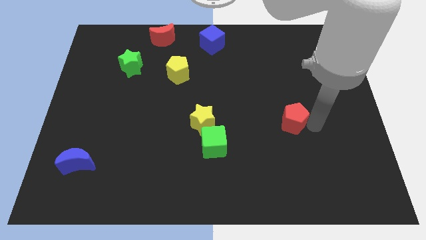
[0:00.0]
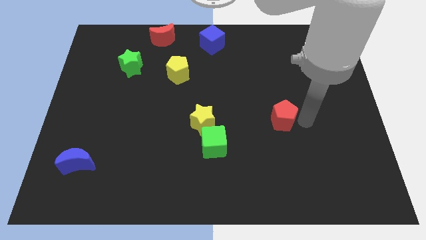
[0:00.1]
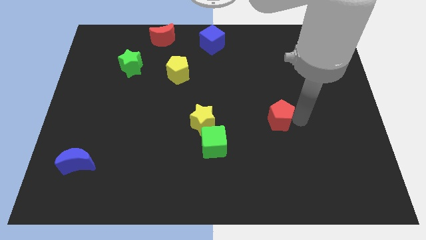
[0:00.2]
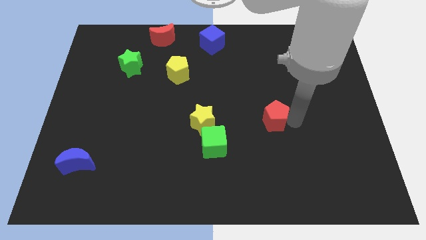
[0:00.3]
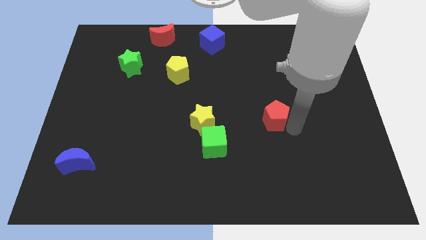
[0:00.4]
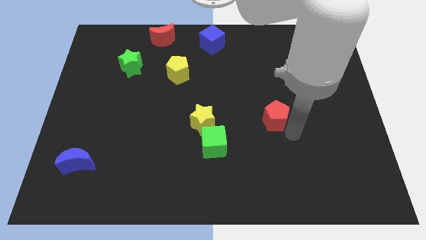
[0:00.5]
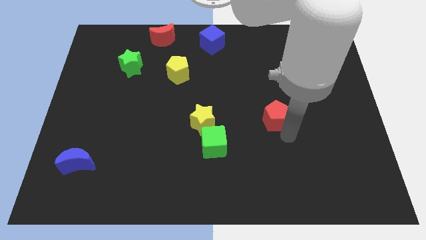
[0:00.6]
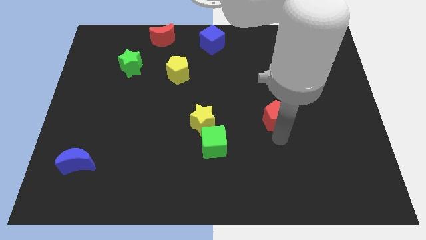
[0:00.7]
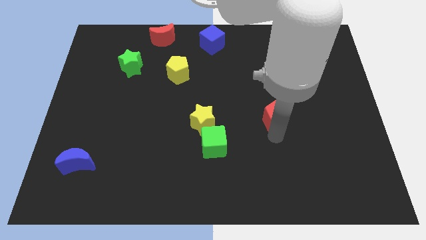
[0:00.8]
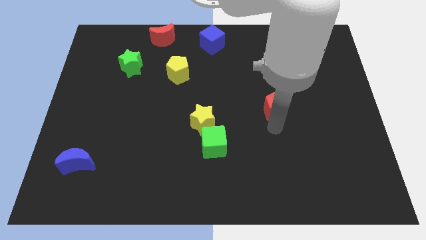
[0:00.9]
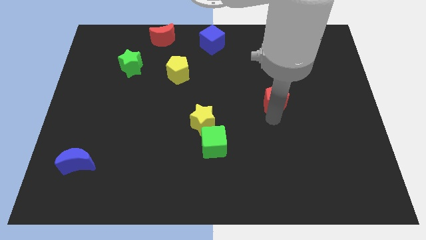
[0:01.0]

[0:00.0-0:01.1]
move the red pentagon slightly upwards

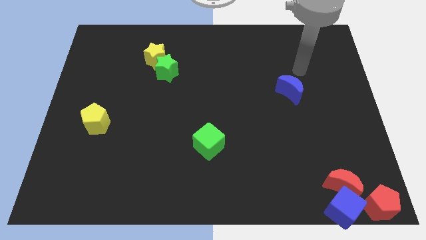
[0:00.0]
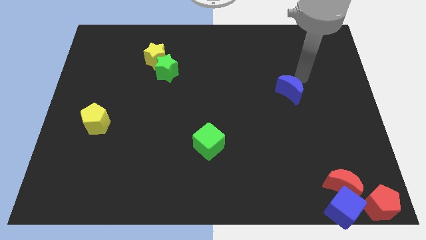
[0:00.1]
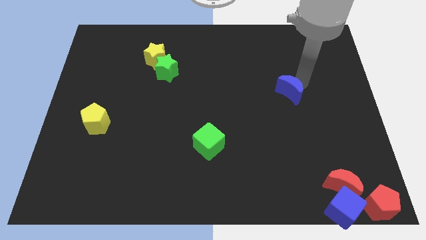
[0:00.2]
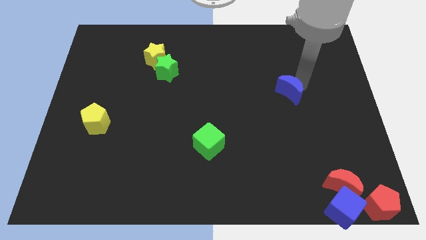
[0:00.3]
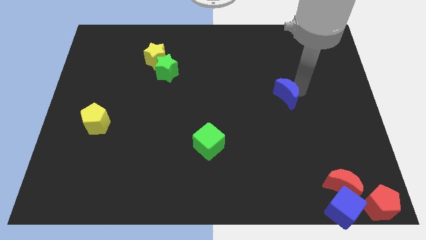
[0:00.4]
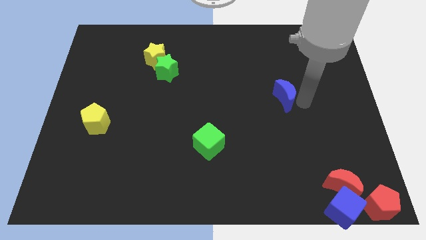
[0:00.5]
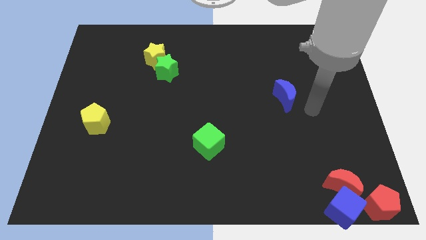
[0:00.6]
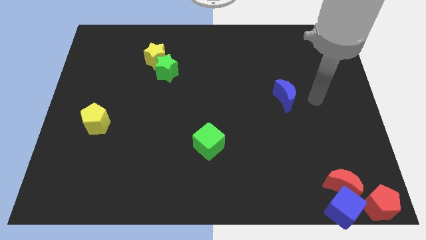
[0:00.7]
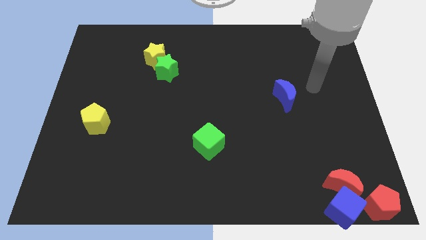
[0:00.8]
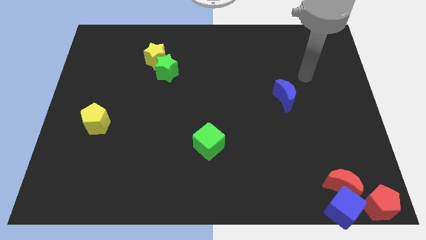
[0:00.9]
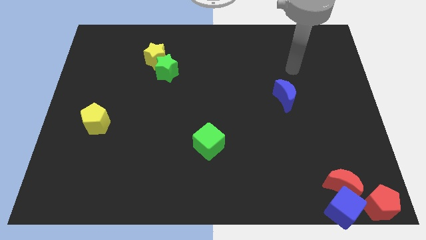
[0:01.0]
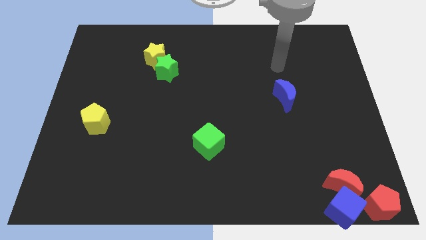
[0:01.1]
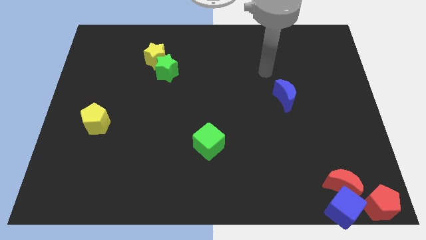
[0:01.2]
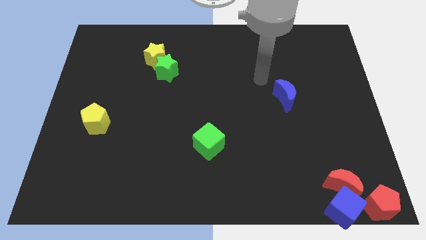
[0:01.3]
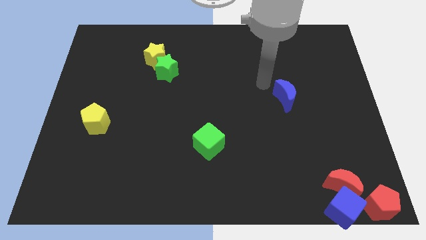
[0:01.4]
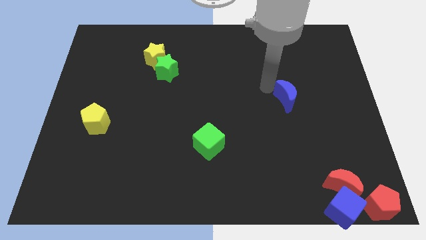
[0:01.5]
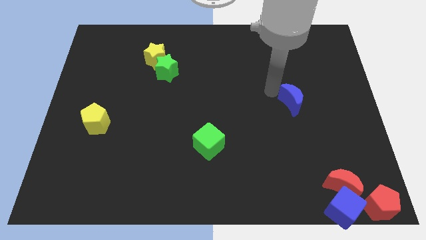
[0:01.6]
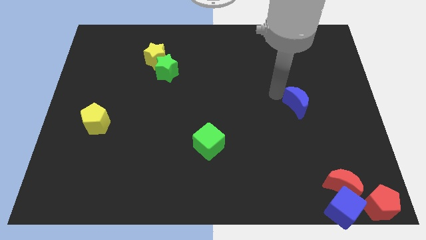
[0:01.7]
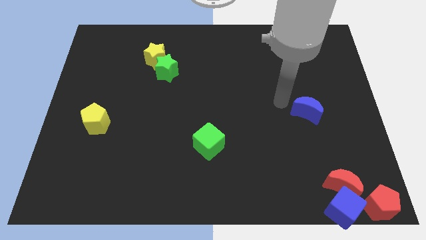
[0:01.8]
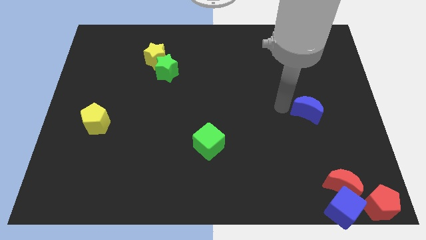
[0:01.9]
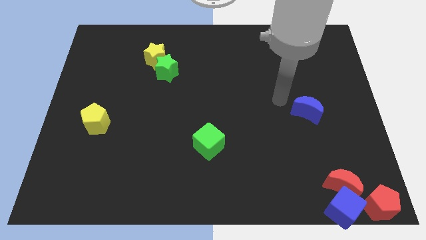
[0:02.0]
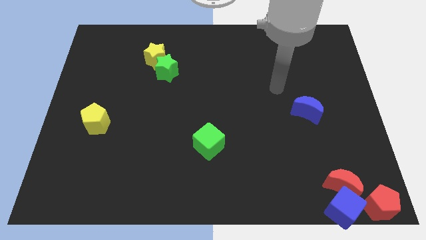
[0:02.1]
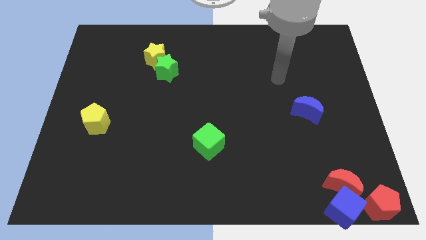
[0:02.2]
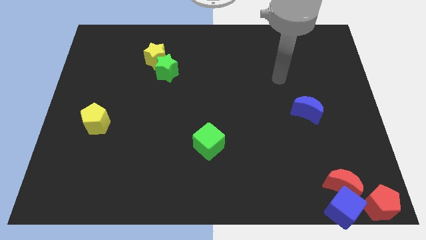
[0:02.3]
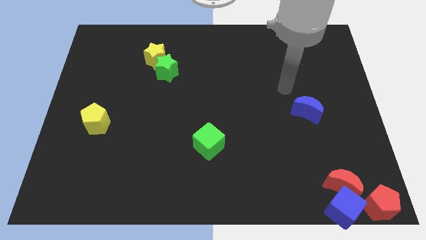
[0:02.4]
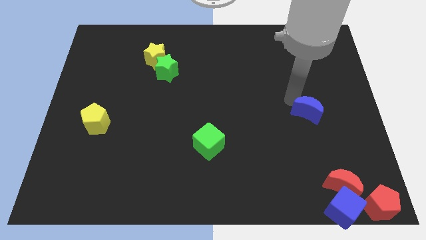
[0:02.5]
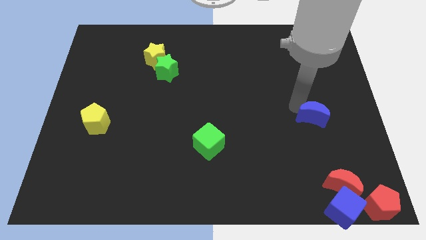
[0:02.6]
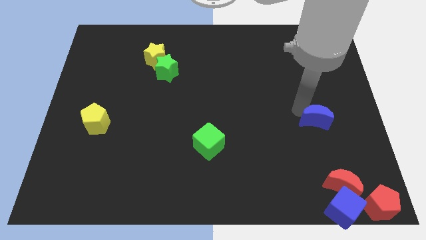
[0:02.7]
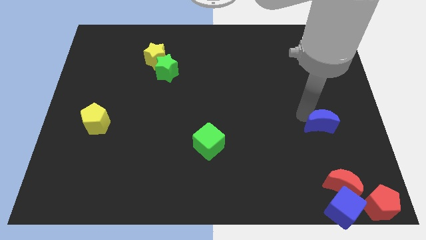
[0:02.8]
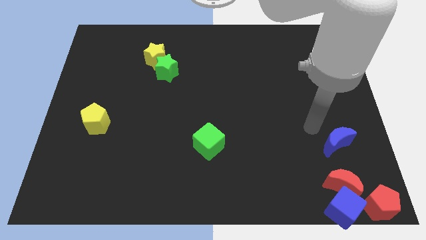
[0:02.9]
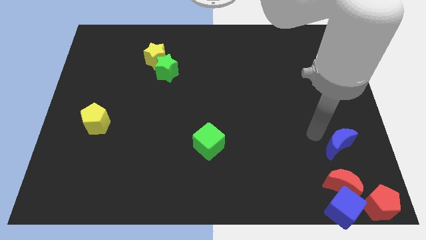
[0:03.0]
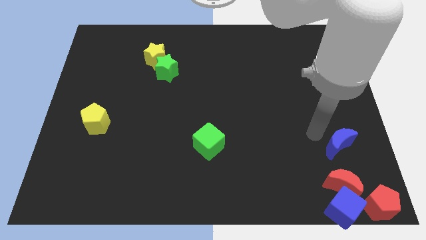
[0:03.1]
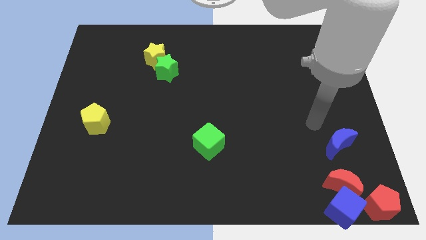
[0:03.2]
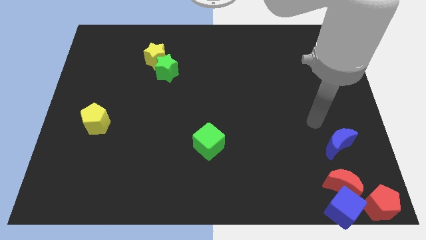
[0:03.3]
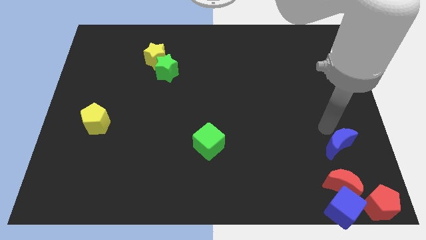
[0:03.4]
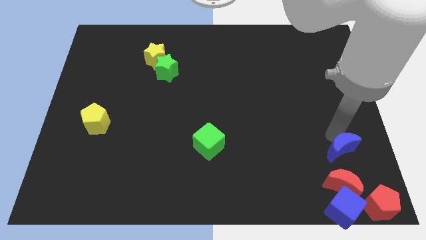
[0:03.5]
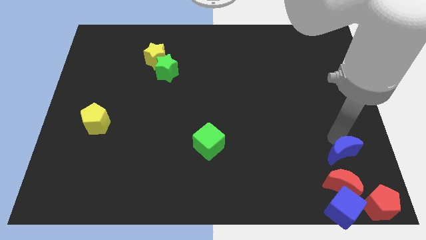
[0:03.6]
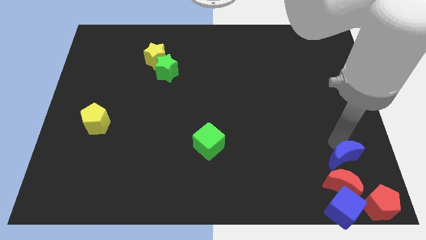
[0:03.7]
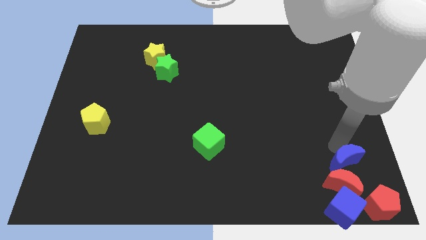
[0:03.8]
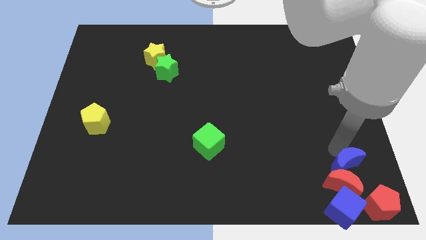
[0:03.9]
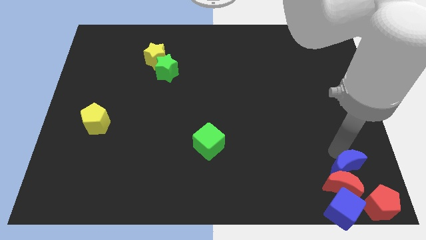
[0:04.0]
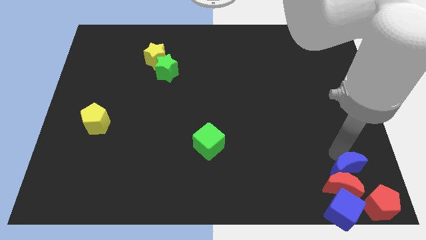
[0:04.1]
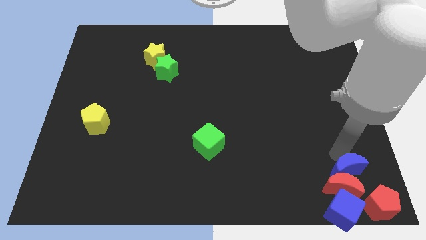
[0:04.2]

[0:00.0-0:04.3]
move the blue crescent into the top side of the red crescent

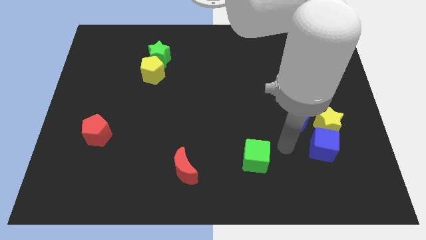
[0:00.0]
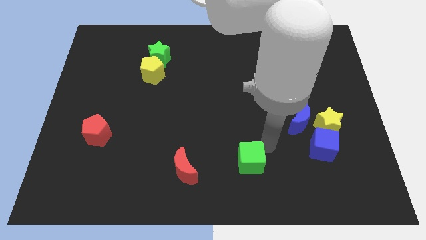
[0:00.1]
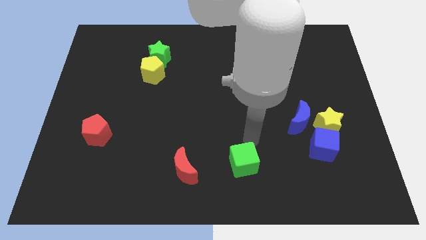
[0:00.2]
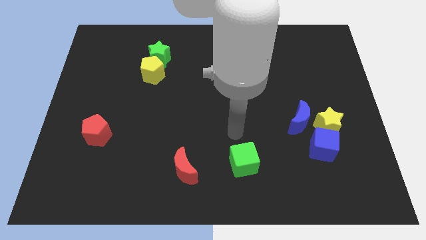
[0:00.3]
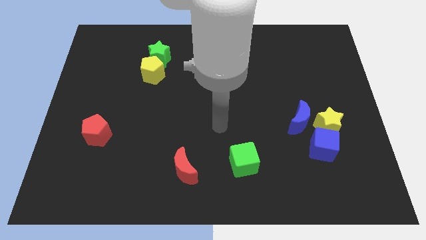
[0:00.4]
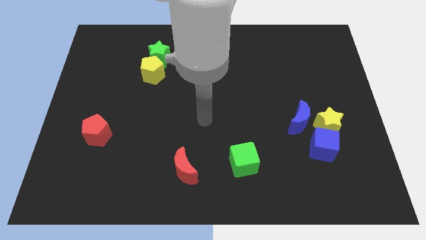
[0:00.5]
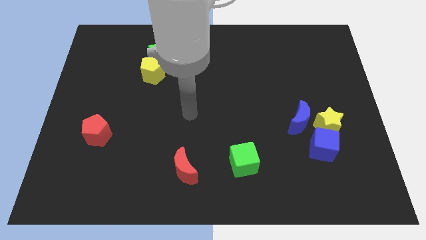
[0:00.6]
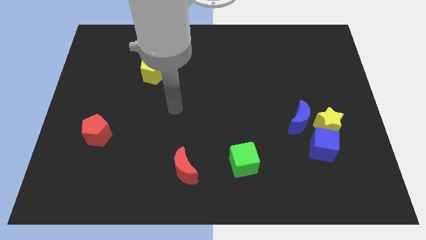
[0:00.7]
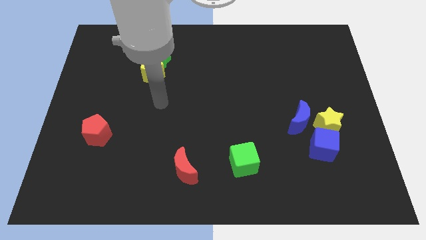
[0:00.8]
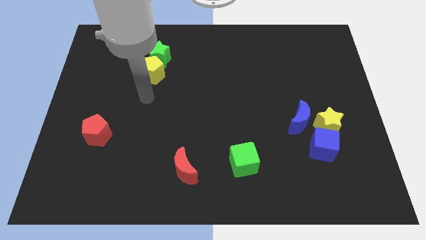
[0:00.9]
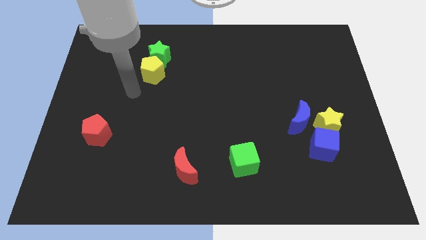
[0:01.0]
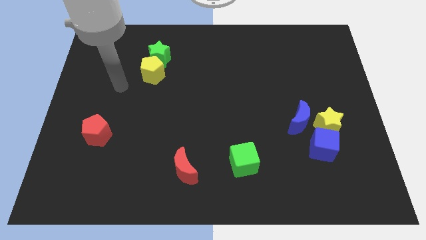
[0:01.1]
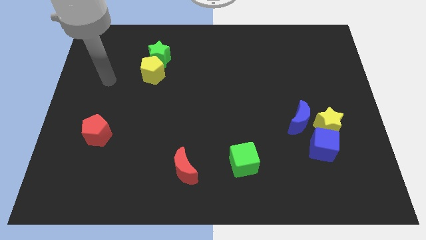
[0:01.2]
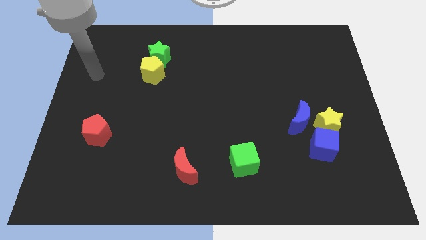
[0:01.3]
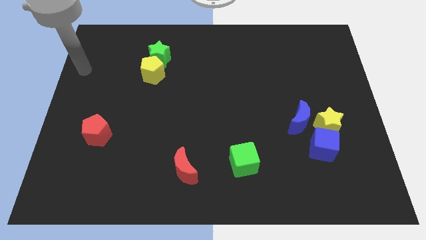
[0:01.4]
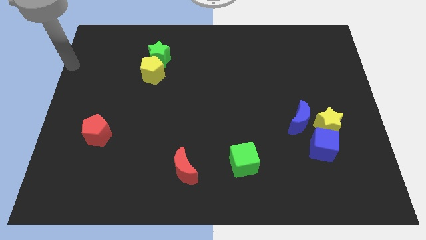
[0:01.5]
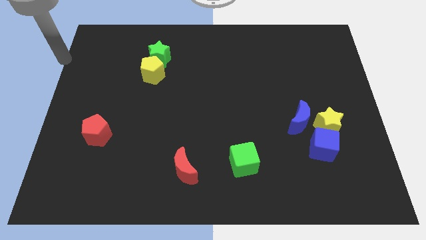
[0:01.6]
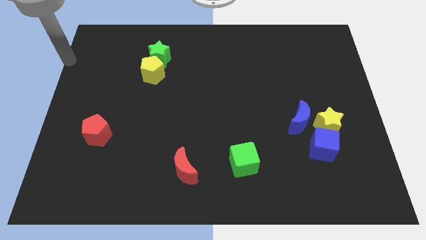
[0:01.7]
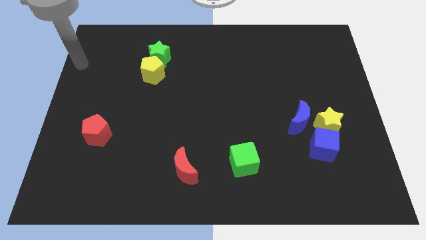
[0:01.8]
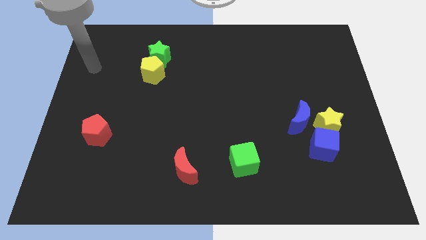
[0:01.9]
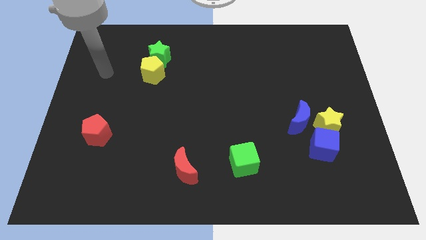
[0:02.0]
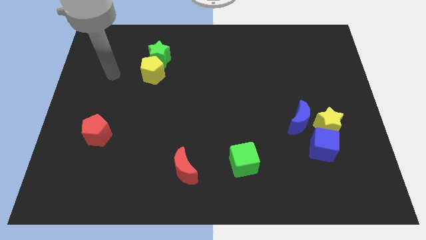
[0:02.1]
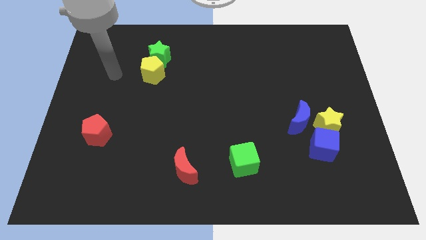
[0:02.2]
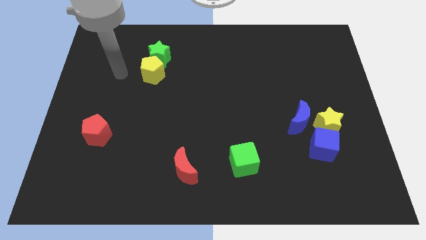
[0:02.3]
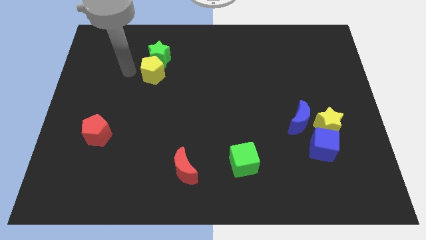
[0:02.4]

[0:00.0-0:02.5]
move the arm diagonally to the left

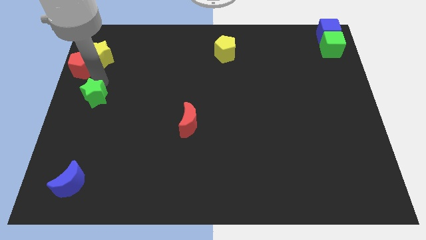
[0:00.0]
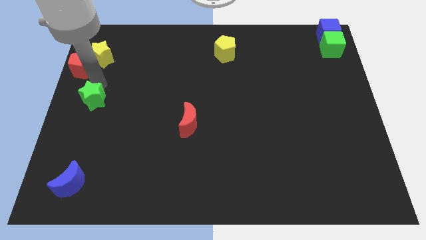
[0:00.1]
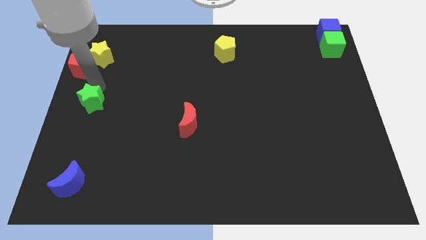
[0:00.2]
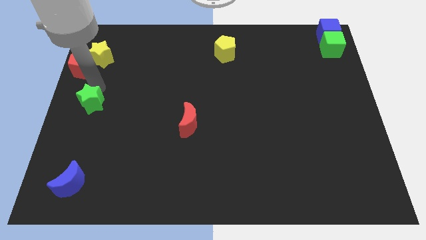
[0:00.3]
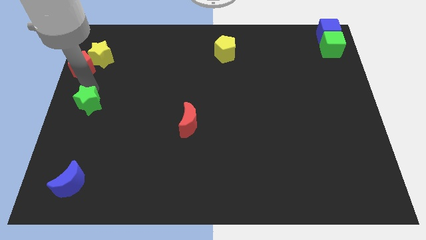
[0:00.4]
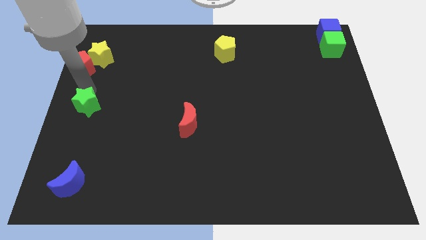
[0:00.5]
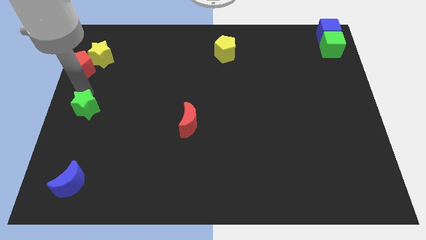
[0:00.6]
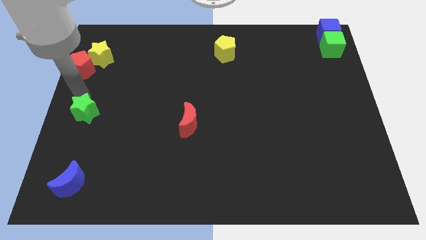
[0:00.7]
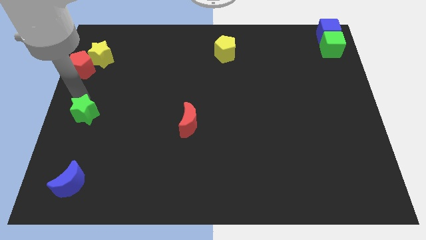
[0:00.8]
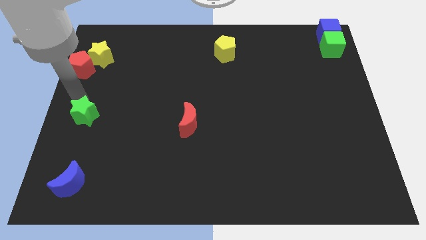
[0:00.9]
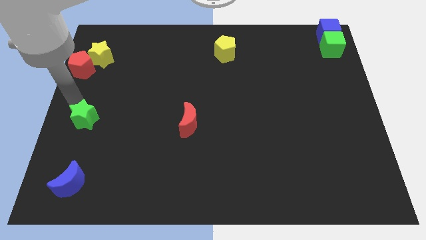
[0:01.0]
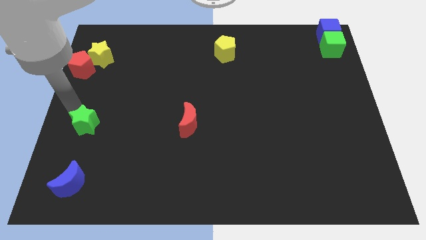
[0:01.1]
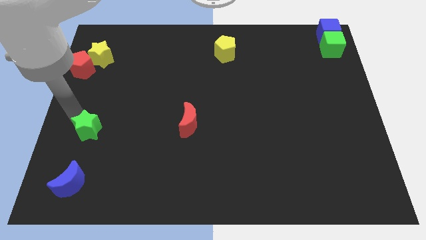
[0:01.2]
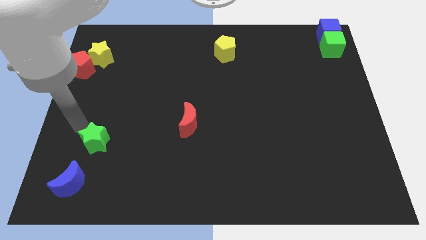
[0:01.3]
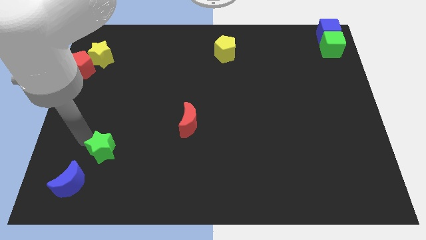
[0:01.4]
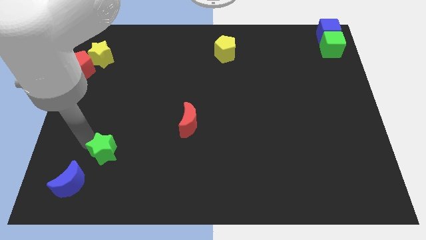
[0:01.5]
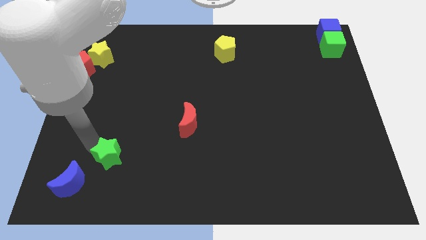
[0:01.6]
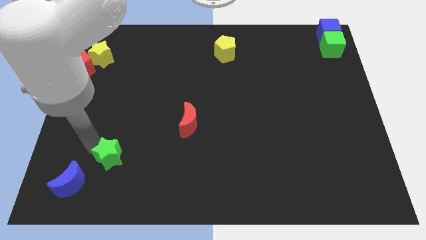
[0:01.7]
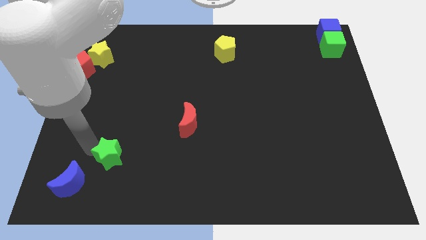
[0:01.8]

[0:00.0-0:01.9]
place the green star between the red moon and blue moon
